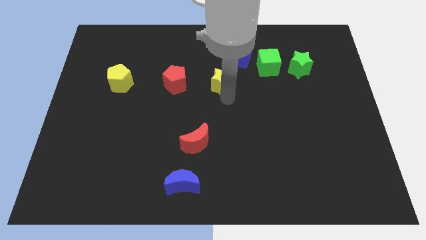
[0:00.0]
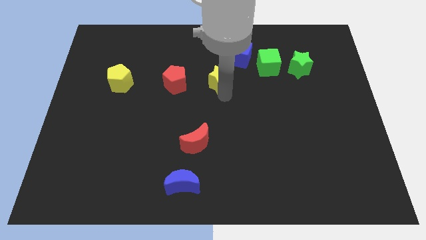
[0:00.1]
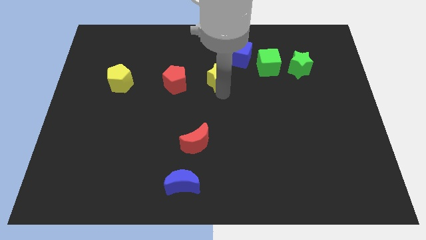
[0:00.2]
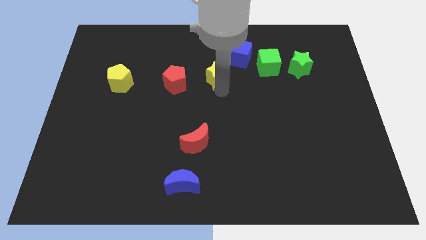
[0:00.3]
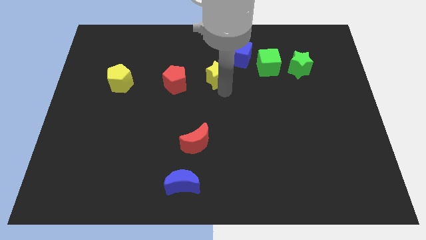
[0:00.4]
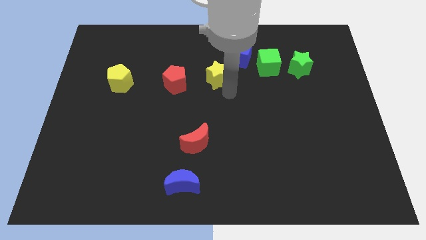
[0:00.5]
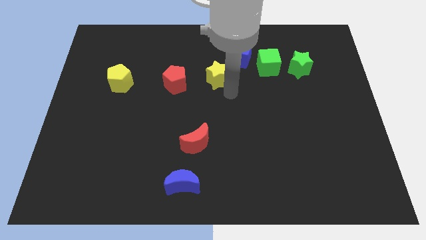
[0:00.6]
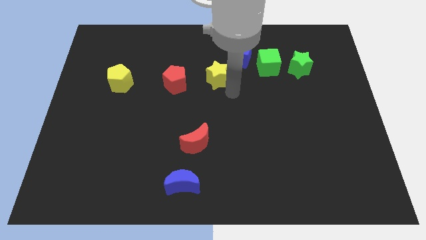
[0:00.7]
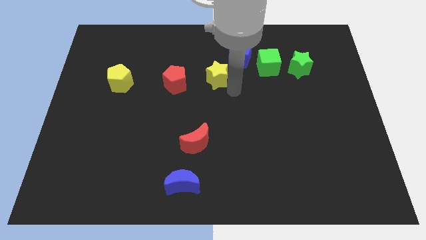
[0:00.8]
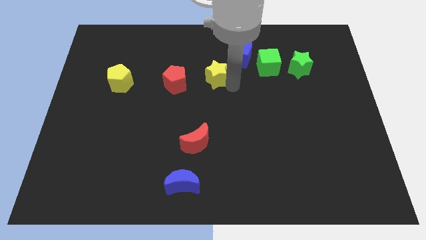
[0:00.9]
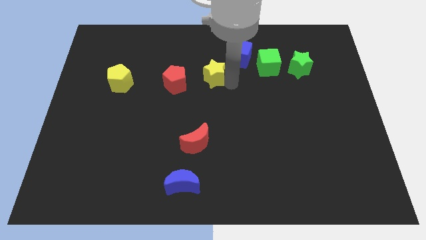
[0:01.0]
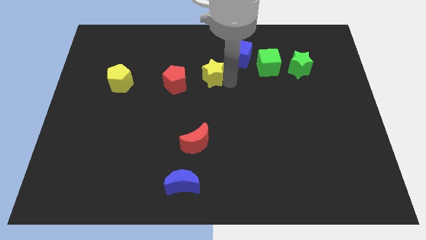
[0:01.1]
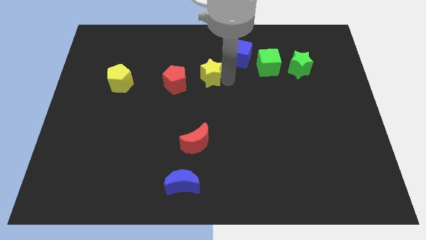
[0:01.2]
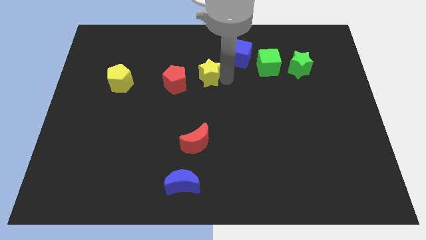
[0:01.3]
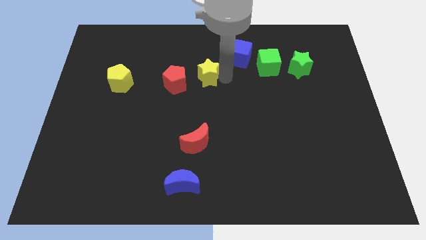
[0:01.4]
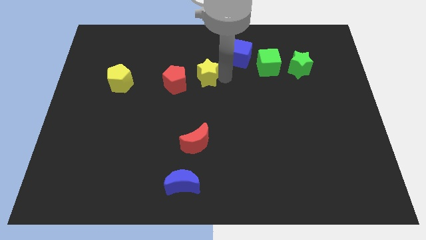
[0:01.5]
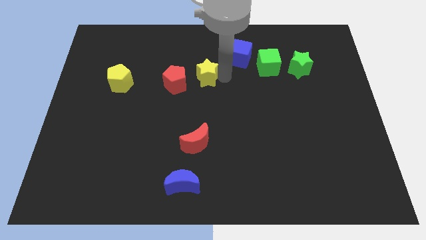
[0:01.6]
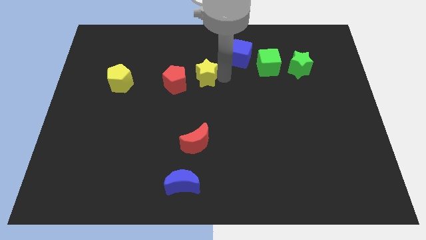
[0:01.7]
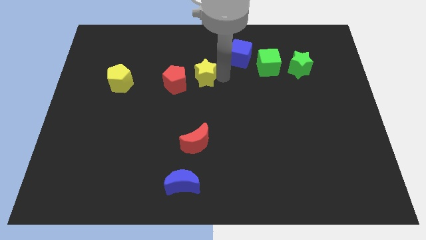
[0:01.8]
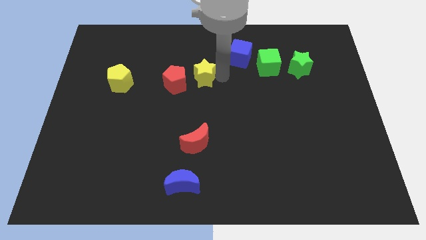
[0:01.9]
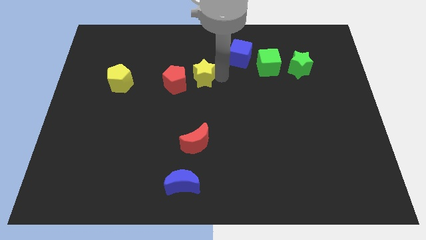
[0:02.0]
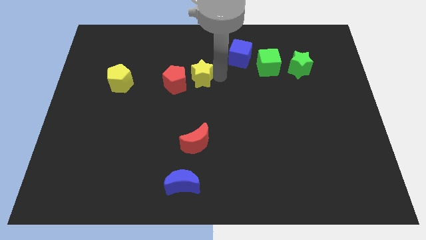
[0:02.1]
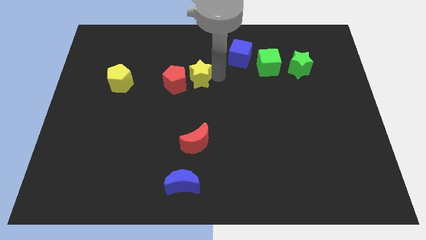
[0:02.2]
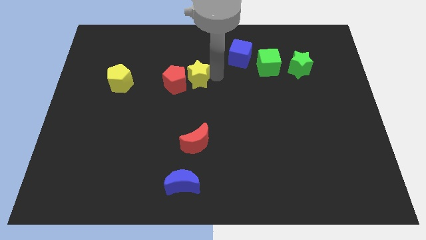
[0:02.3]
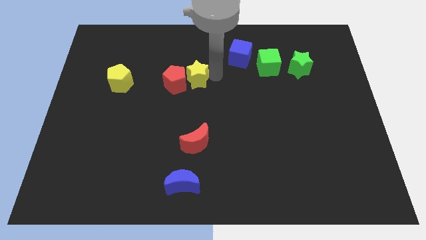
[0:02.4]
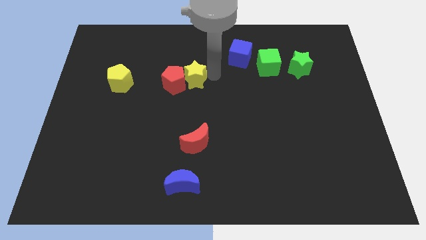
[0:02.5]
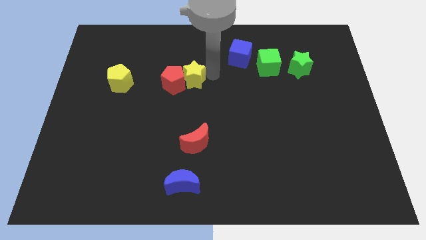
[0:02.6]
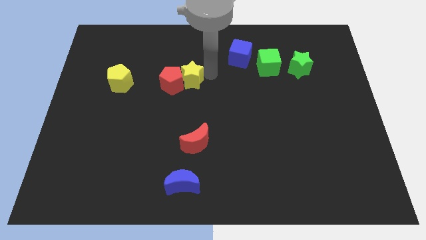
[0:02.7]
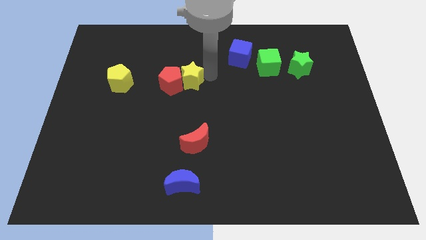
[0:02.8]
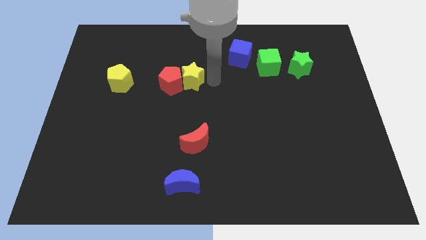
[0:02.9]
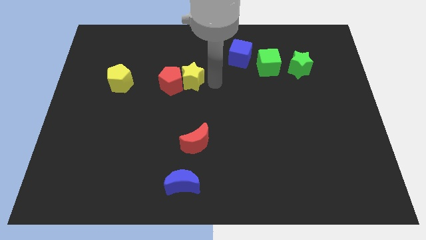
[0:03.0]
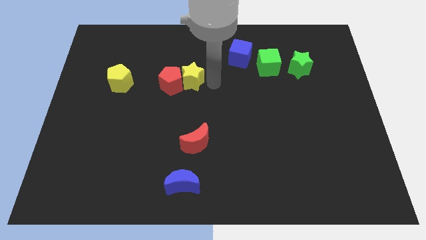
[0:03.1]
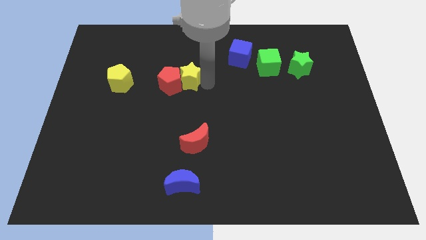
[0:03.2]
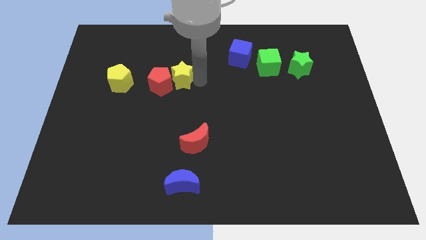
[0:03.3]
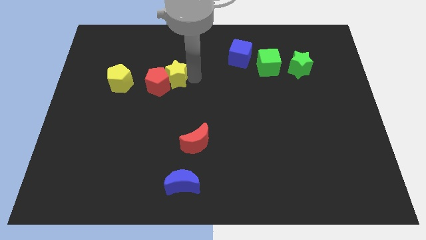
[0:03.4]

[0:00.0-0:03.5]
place yellow star above red crescent

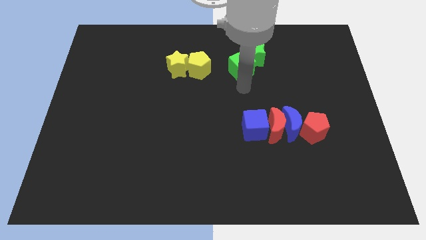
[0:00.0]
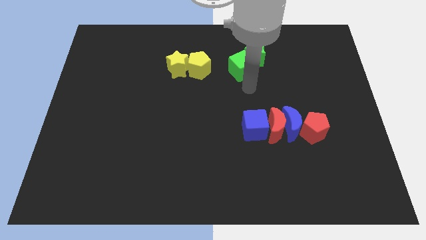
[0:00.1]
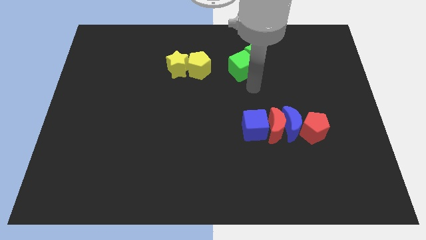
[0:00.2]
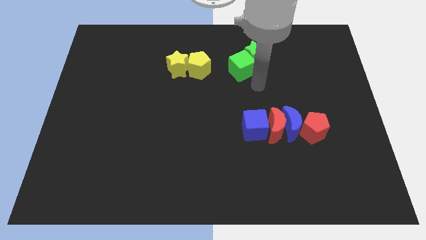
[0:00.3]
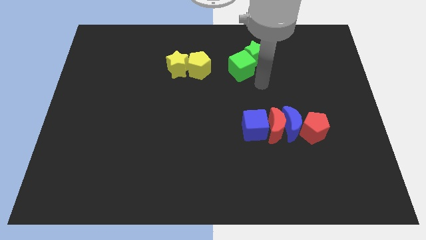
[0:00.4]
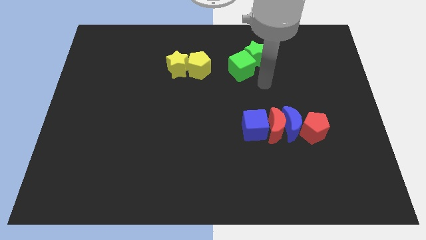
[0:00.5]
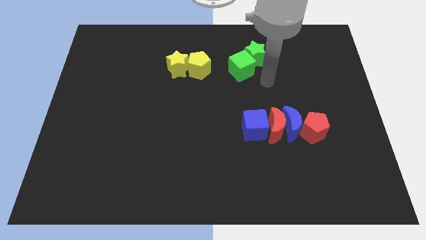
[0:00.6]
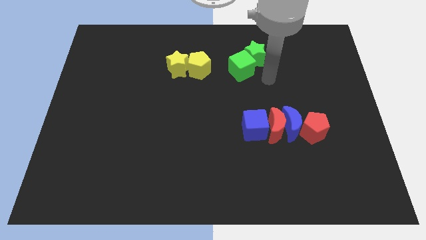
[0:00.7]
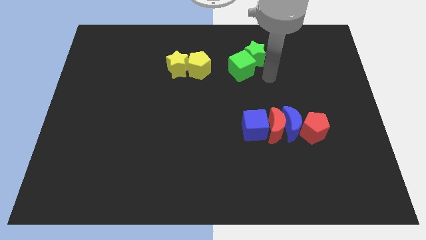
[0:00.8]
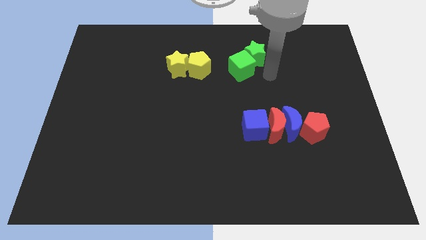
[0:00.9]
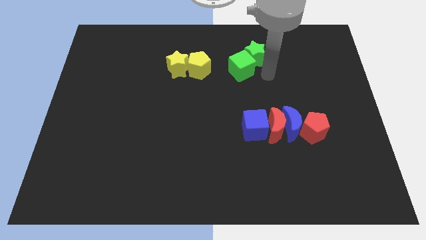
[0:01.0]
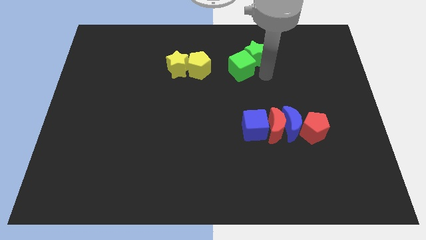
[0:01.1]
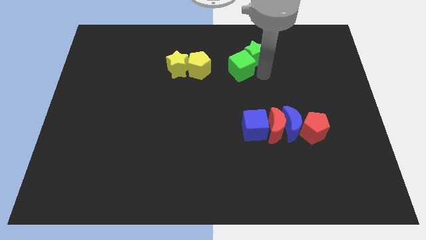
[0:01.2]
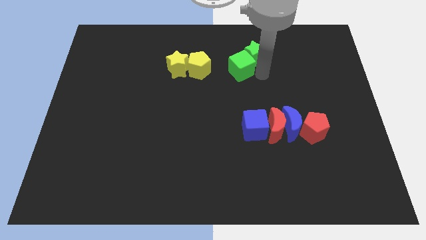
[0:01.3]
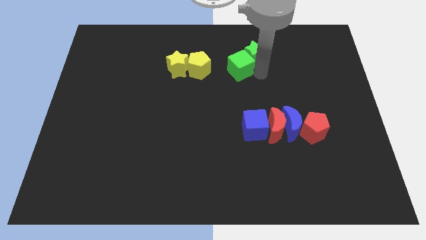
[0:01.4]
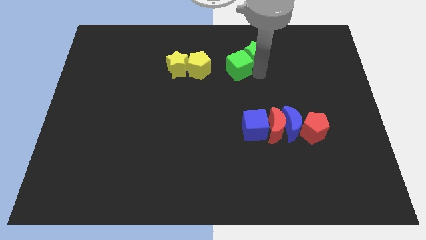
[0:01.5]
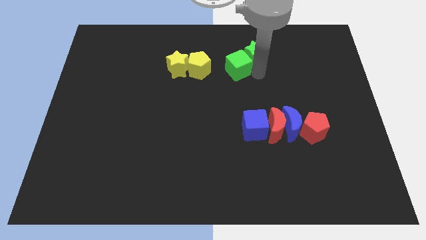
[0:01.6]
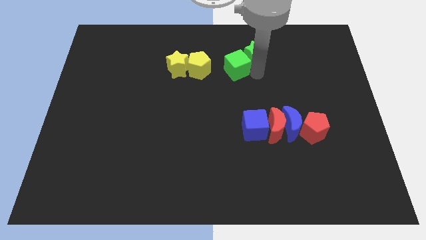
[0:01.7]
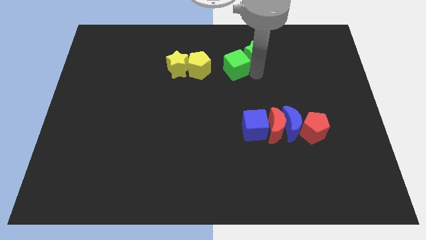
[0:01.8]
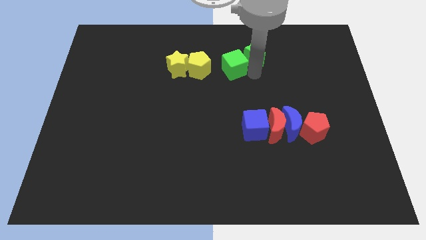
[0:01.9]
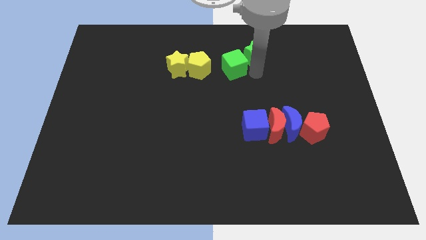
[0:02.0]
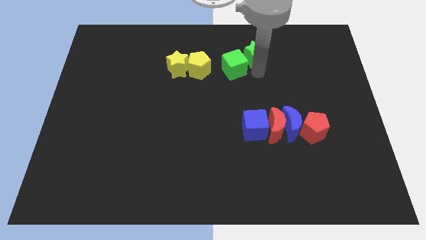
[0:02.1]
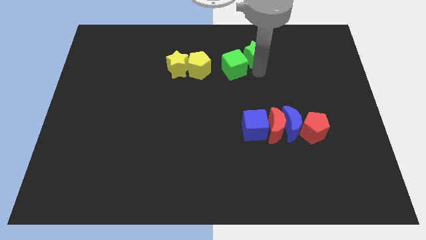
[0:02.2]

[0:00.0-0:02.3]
slightly push green cube towards left

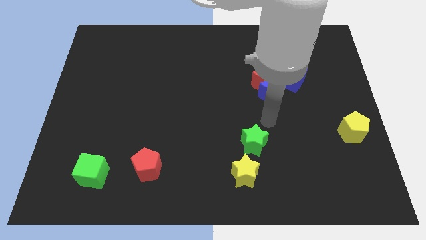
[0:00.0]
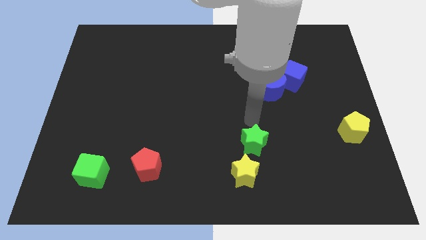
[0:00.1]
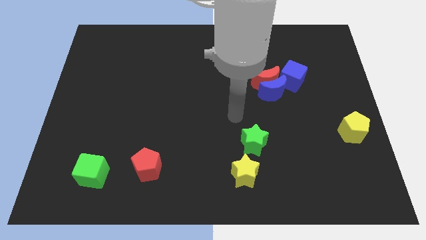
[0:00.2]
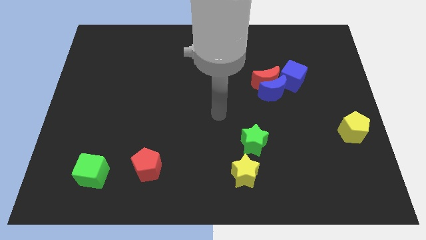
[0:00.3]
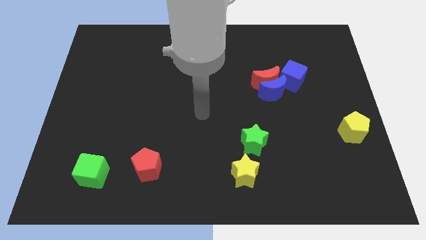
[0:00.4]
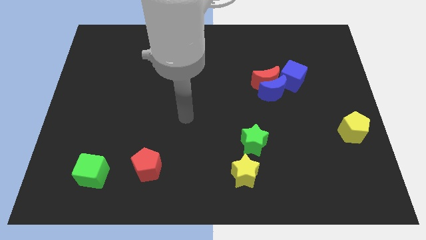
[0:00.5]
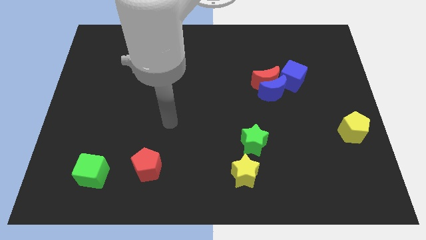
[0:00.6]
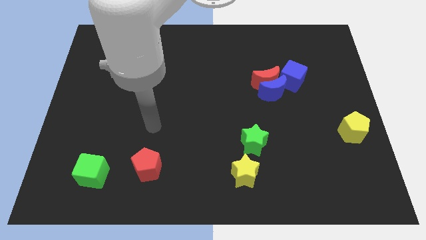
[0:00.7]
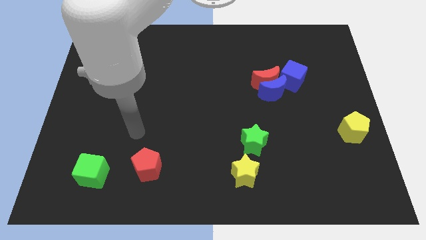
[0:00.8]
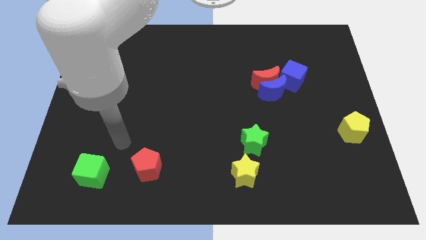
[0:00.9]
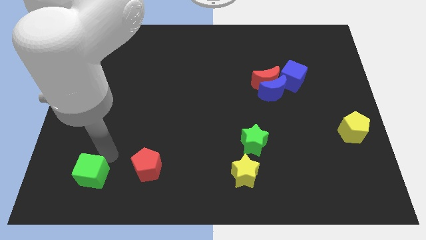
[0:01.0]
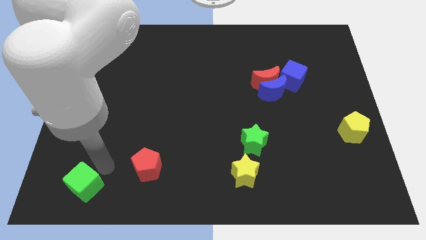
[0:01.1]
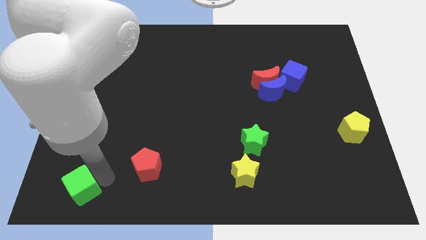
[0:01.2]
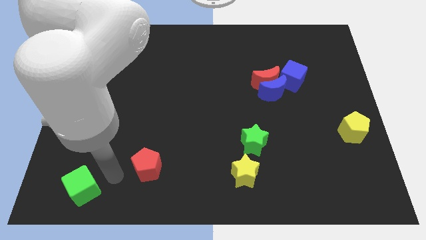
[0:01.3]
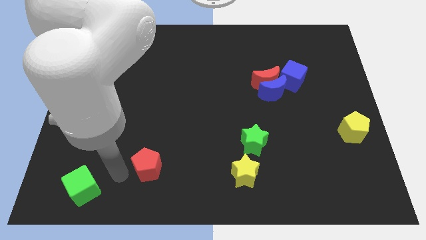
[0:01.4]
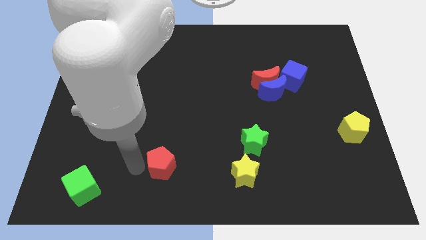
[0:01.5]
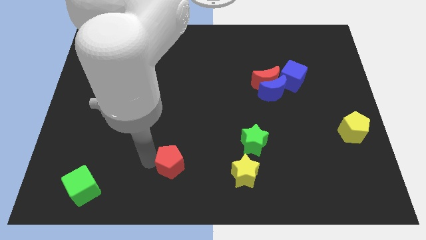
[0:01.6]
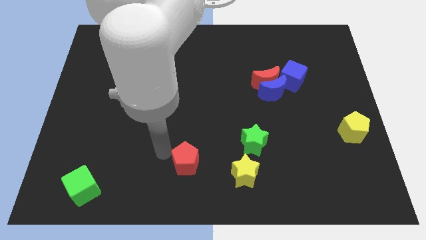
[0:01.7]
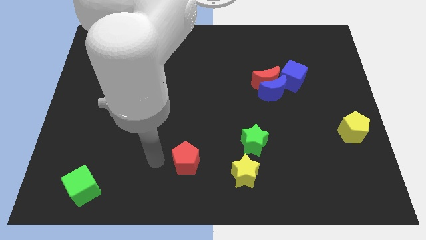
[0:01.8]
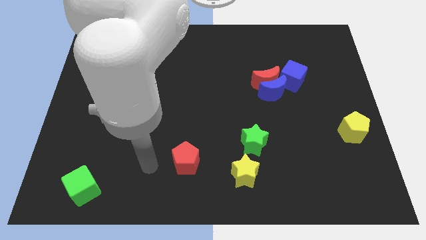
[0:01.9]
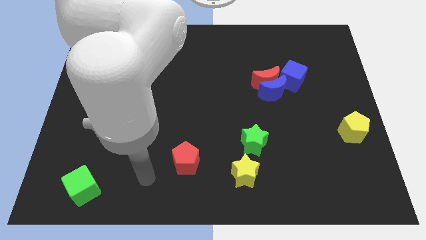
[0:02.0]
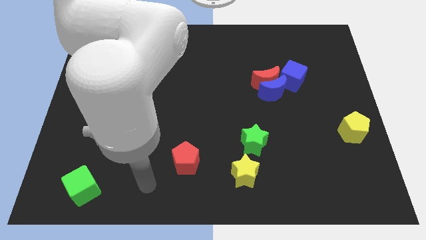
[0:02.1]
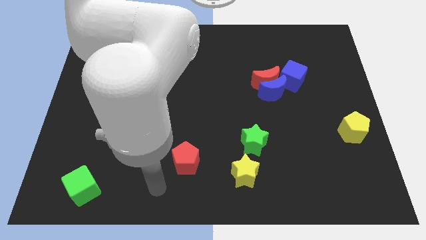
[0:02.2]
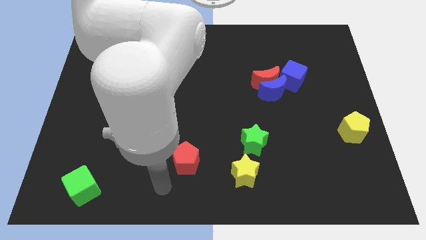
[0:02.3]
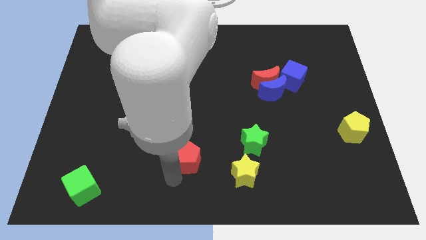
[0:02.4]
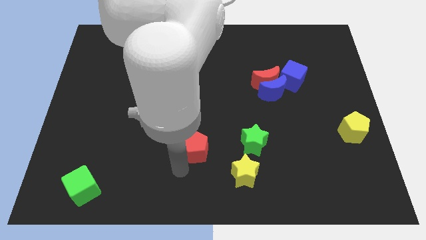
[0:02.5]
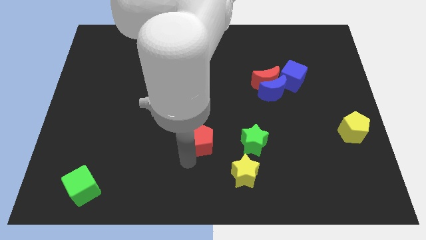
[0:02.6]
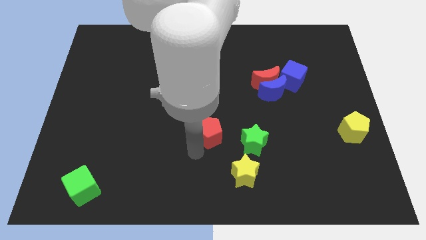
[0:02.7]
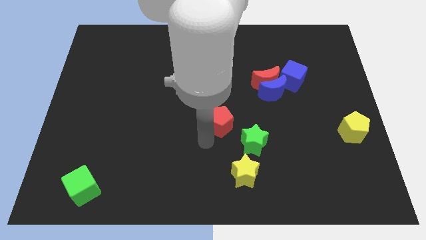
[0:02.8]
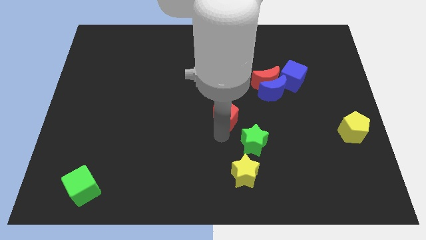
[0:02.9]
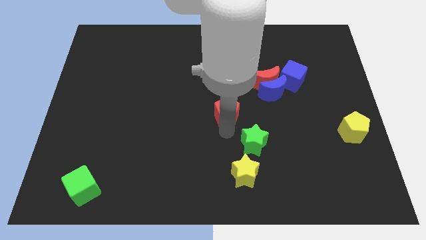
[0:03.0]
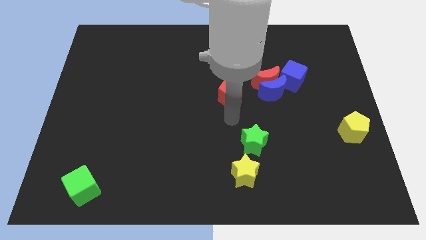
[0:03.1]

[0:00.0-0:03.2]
push the green cube and red pentagon in opposite directions

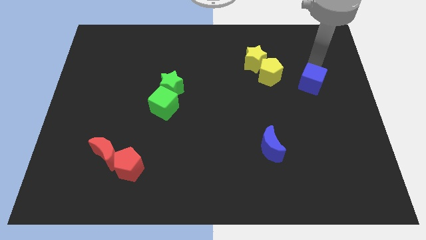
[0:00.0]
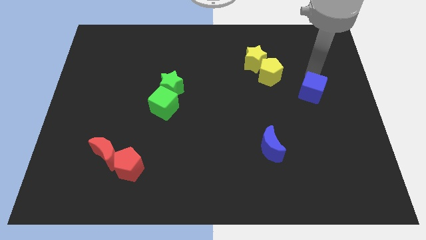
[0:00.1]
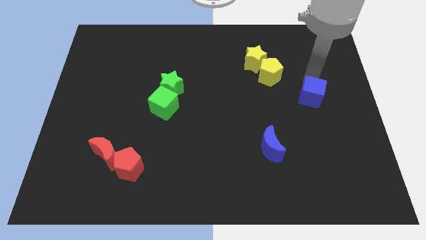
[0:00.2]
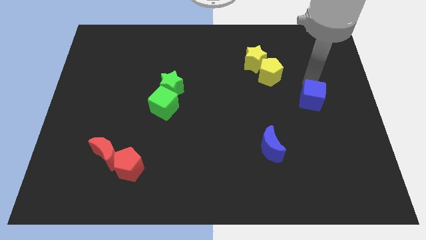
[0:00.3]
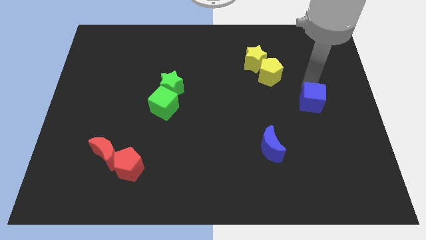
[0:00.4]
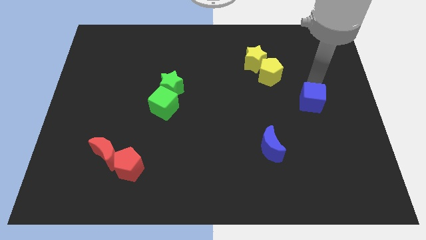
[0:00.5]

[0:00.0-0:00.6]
move the blue cube diagonally right to the blue crescent
